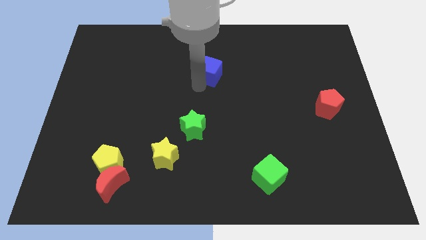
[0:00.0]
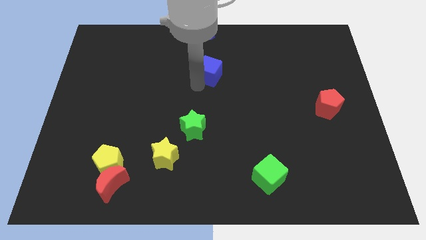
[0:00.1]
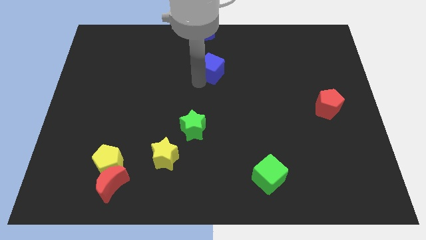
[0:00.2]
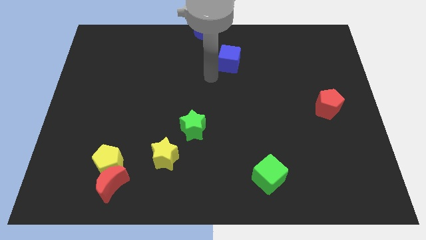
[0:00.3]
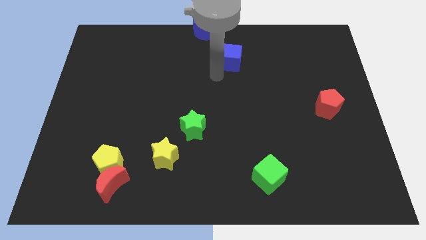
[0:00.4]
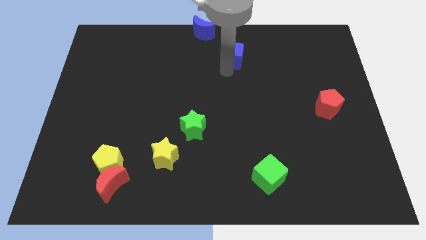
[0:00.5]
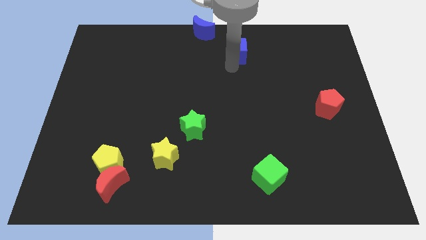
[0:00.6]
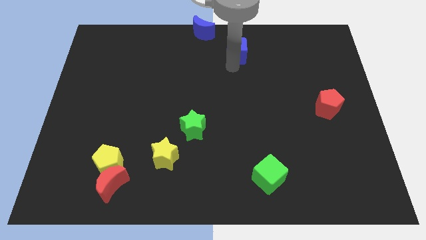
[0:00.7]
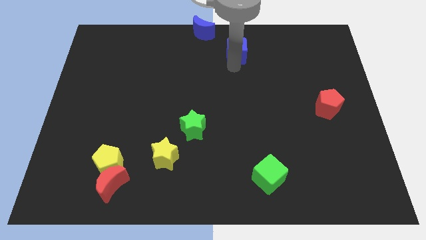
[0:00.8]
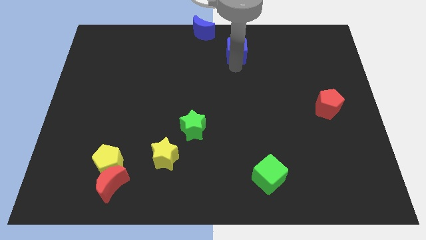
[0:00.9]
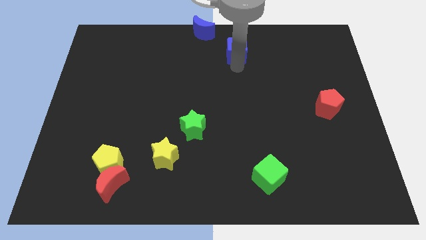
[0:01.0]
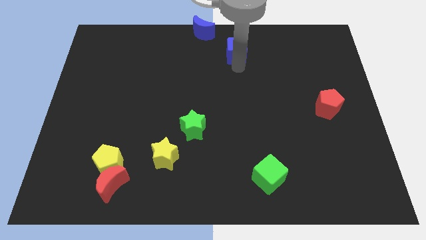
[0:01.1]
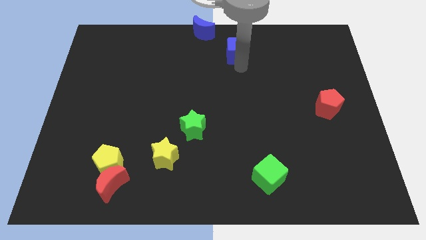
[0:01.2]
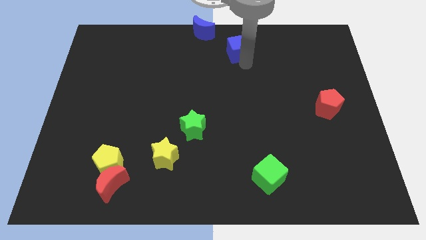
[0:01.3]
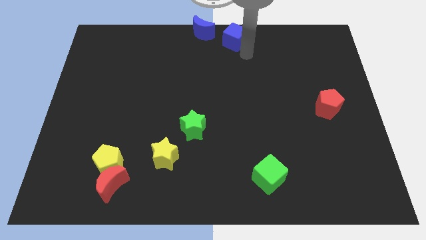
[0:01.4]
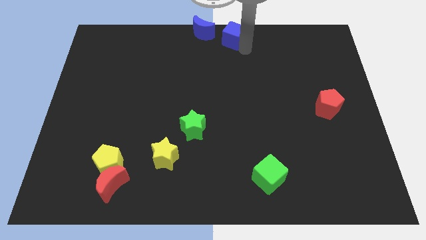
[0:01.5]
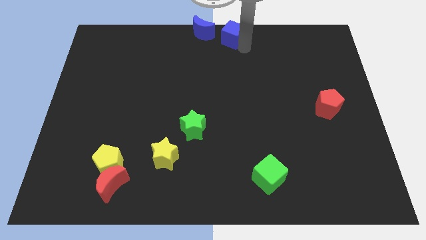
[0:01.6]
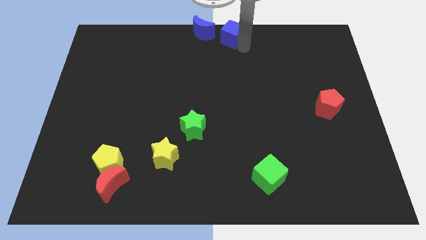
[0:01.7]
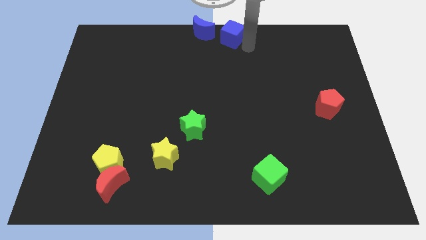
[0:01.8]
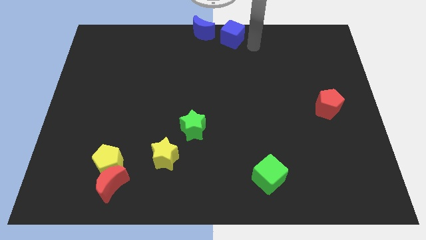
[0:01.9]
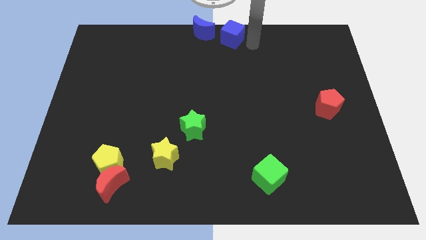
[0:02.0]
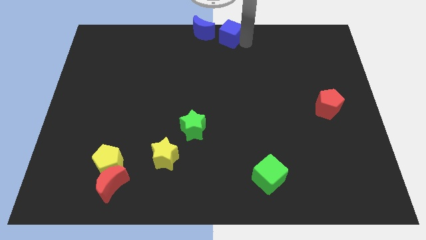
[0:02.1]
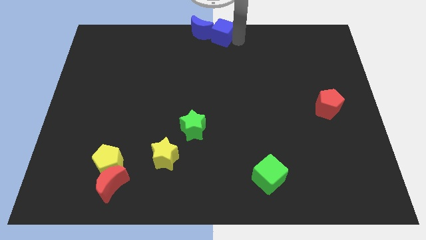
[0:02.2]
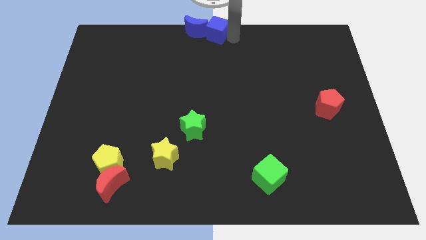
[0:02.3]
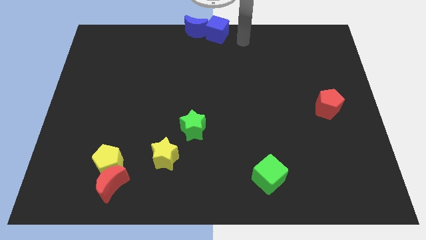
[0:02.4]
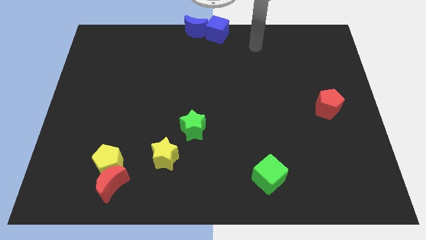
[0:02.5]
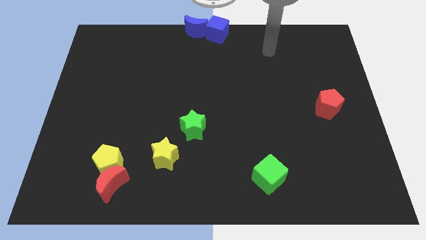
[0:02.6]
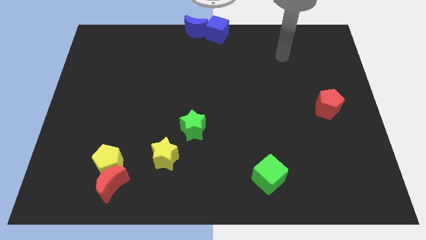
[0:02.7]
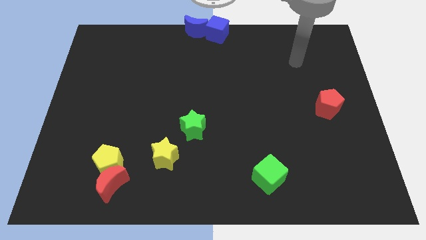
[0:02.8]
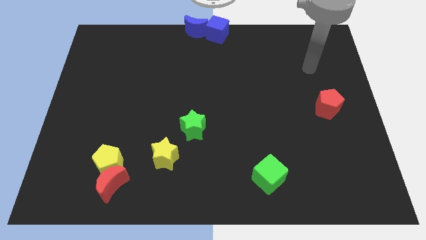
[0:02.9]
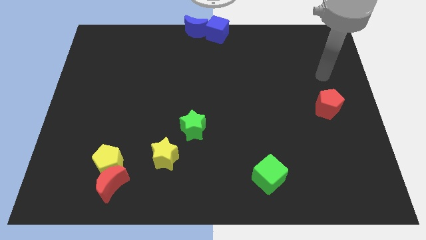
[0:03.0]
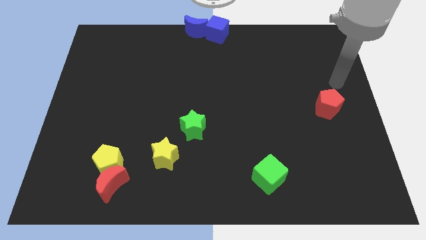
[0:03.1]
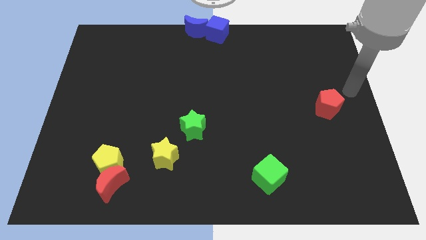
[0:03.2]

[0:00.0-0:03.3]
move the blue cube into the right side of the blue moon

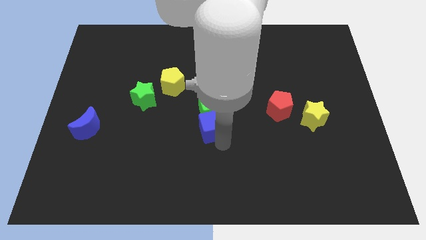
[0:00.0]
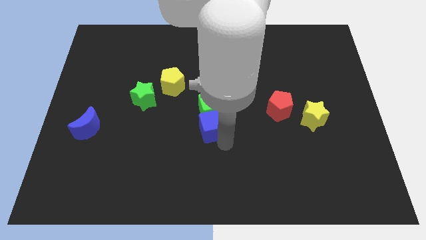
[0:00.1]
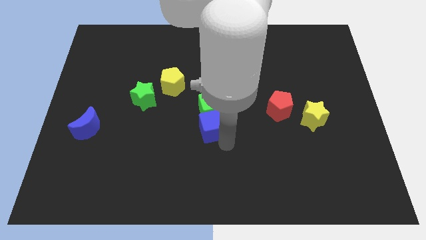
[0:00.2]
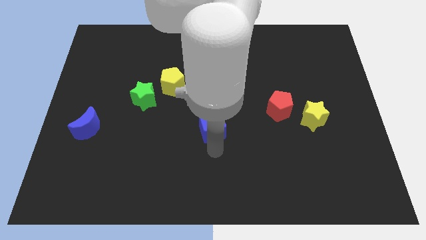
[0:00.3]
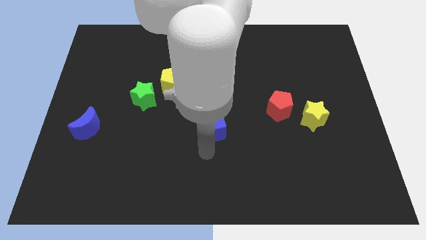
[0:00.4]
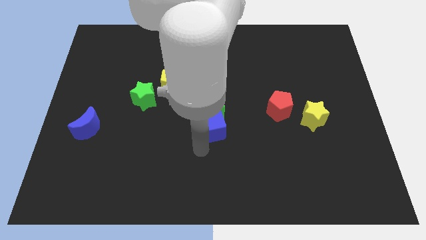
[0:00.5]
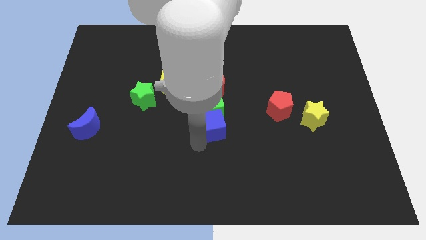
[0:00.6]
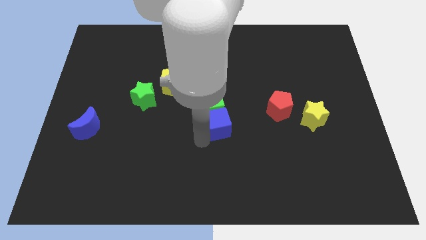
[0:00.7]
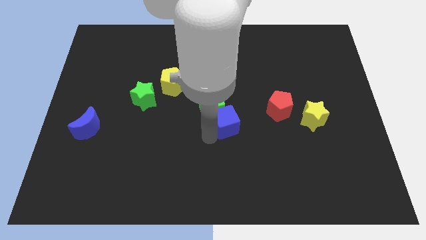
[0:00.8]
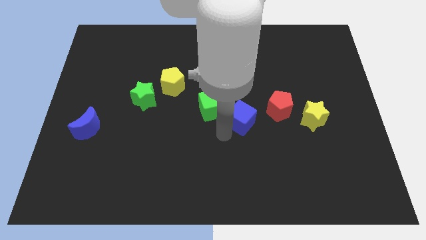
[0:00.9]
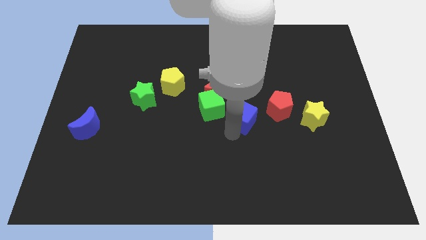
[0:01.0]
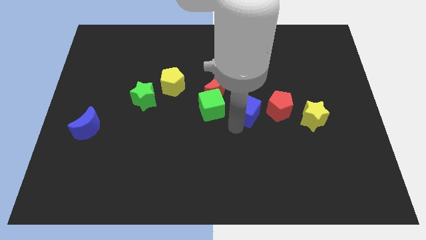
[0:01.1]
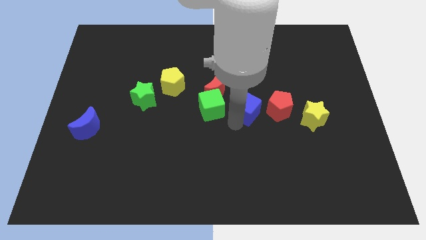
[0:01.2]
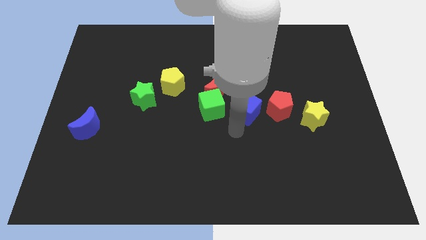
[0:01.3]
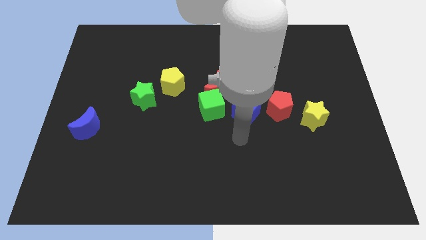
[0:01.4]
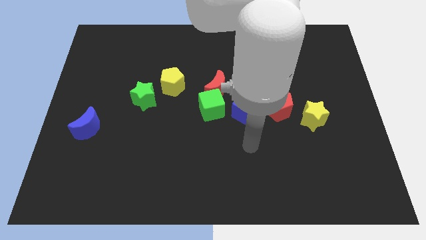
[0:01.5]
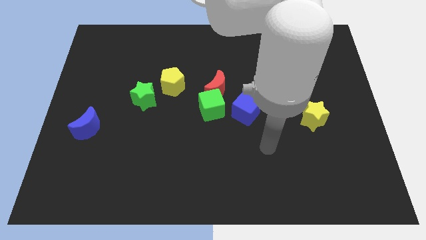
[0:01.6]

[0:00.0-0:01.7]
move the blue cube close to the green cube

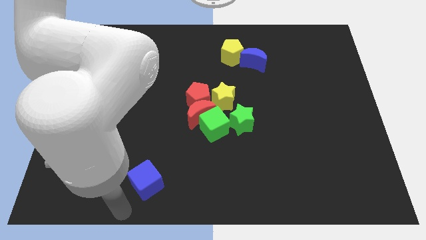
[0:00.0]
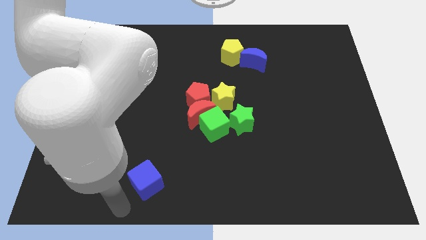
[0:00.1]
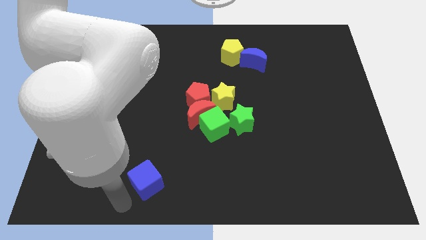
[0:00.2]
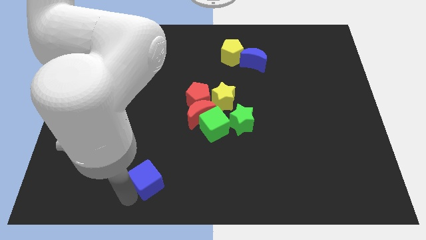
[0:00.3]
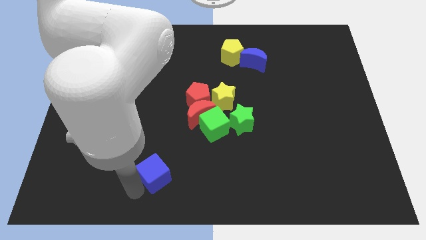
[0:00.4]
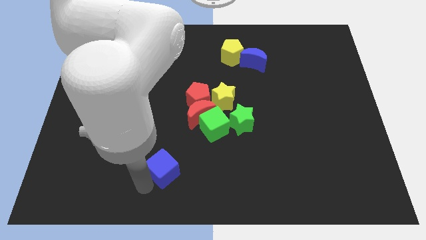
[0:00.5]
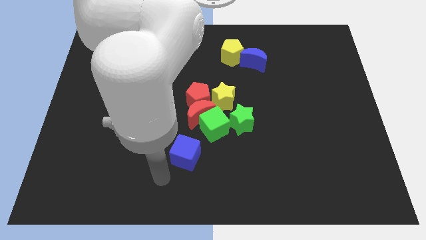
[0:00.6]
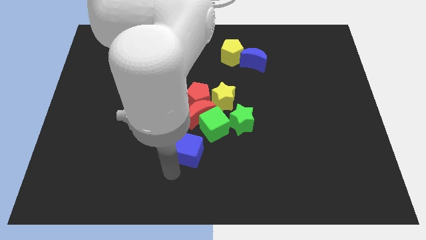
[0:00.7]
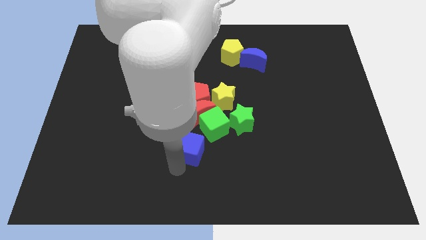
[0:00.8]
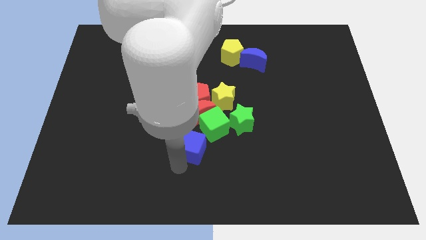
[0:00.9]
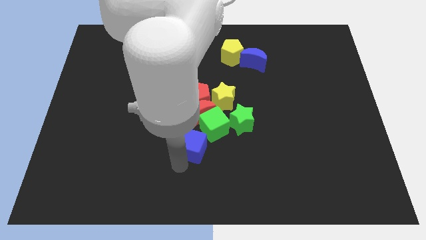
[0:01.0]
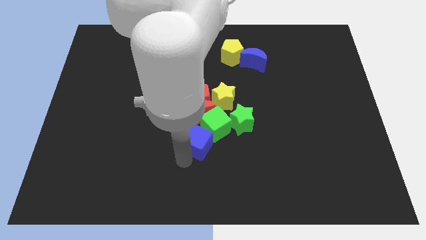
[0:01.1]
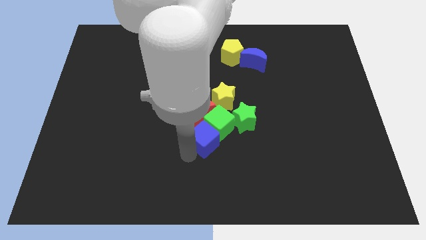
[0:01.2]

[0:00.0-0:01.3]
push blue cube towards green cube

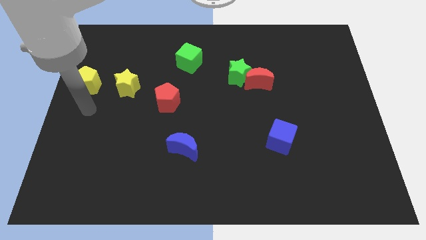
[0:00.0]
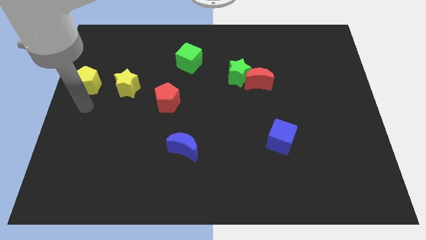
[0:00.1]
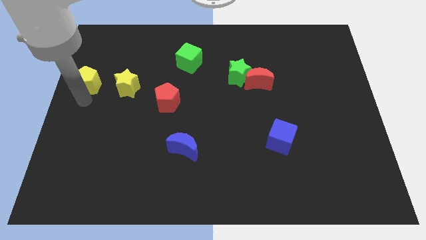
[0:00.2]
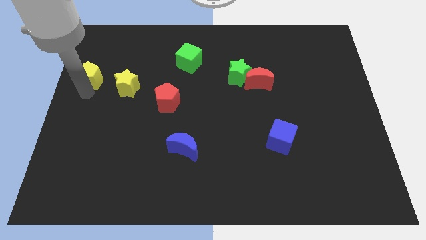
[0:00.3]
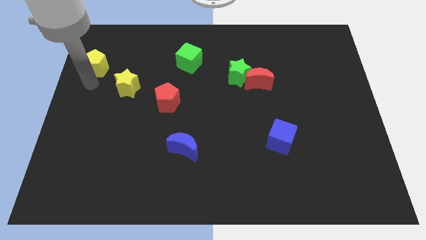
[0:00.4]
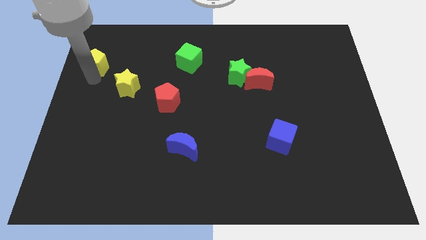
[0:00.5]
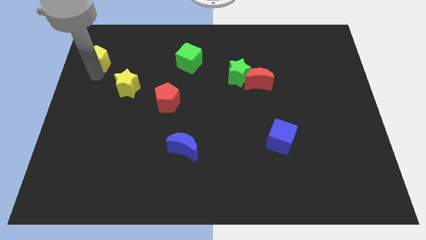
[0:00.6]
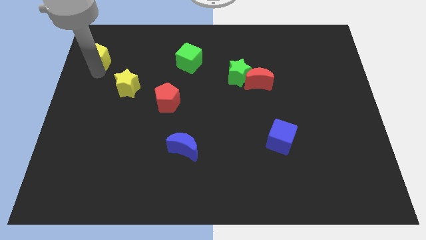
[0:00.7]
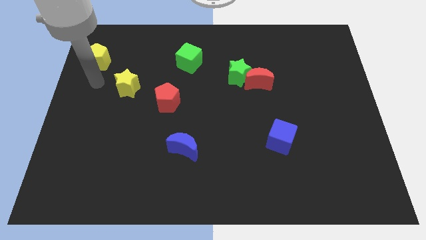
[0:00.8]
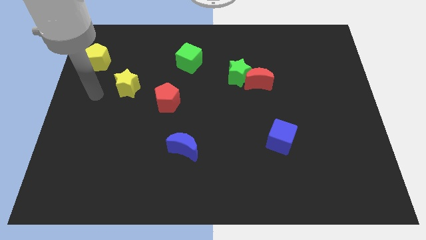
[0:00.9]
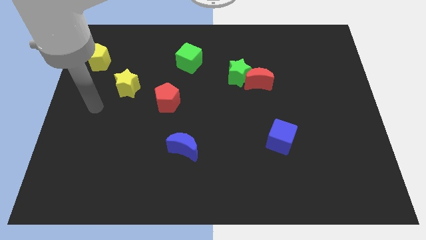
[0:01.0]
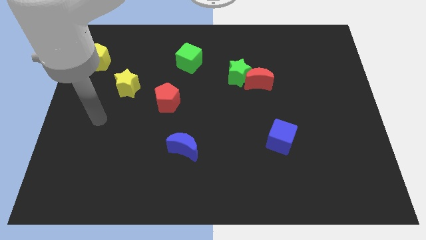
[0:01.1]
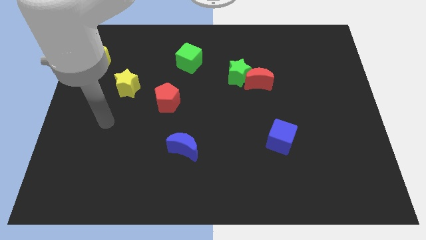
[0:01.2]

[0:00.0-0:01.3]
push the yellow pentagon towards the top left corner

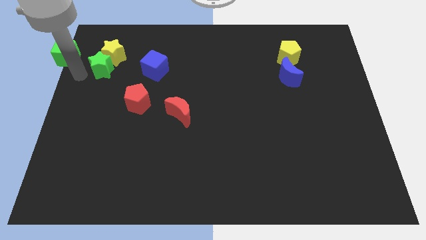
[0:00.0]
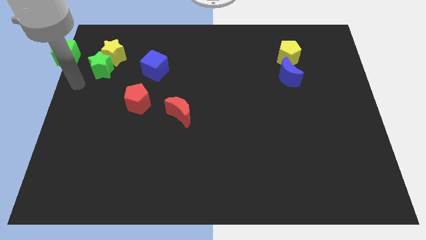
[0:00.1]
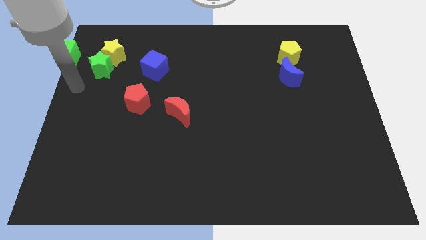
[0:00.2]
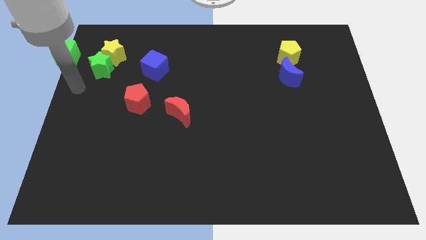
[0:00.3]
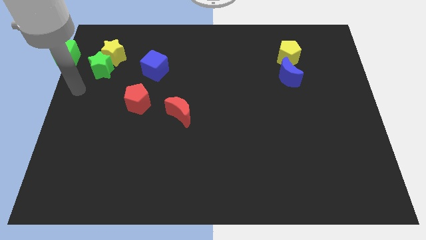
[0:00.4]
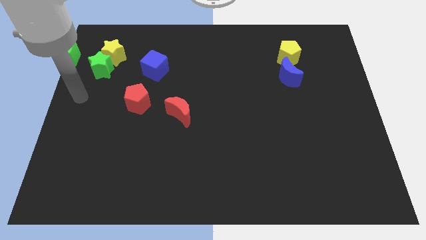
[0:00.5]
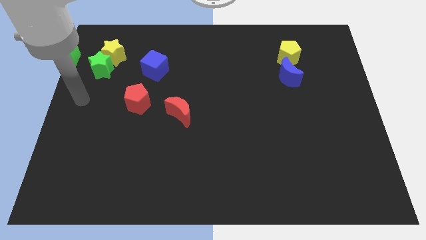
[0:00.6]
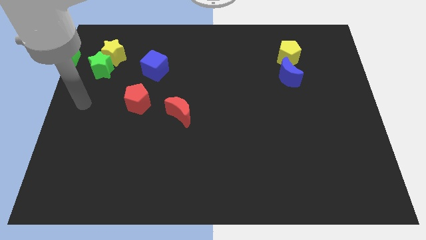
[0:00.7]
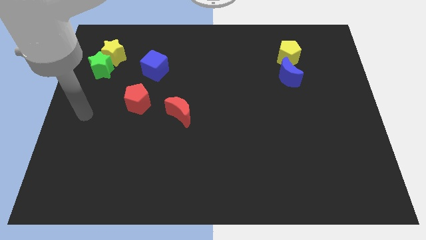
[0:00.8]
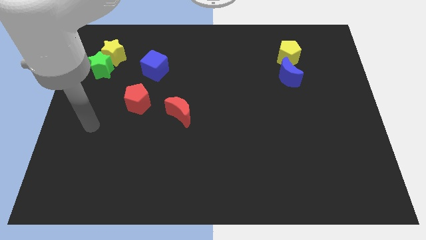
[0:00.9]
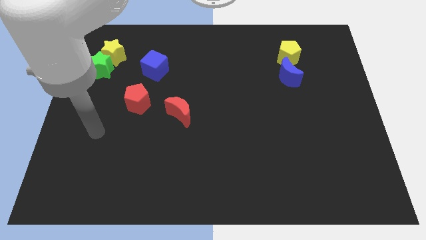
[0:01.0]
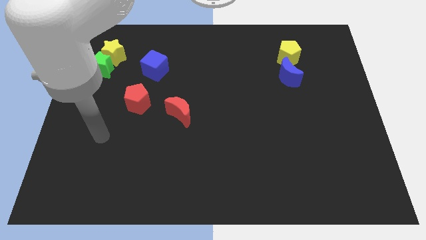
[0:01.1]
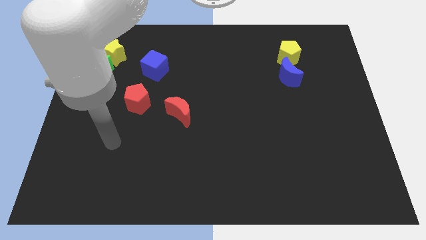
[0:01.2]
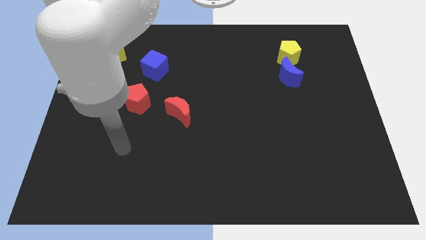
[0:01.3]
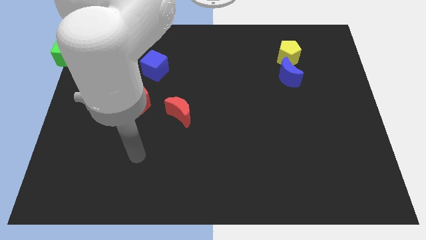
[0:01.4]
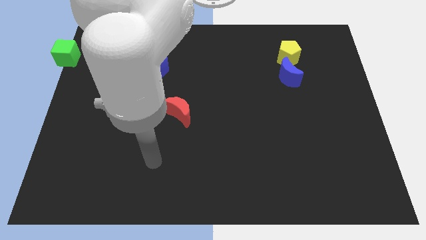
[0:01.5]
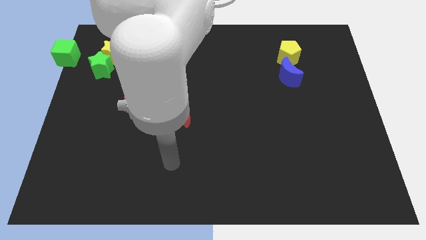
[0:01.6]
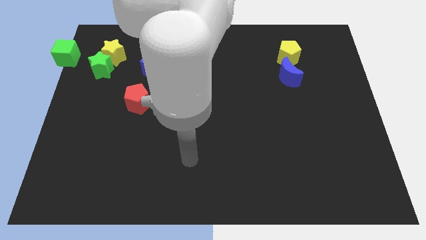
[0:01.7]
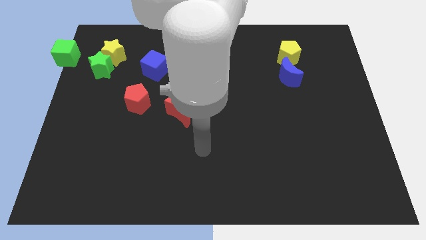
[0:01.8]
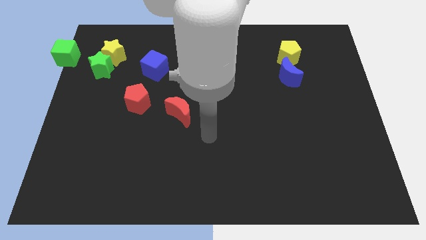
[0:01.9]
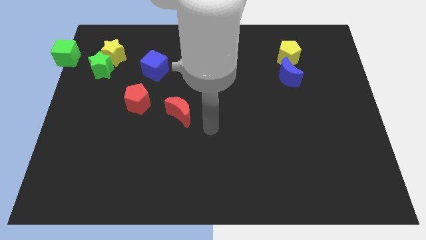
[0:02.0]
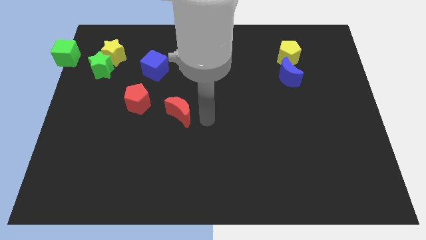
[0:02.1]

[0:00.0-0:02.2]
move your arm away from the green cube
